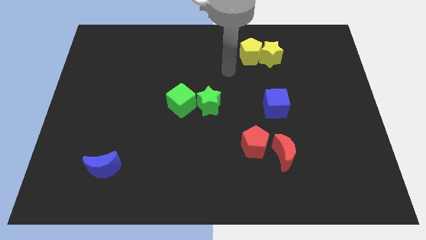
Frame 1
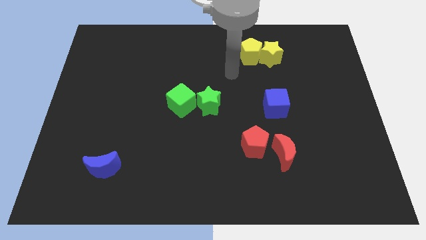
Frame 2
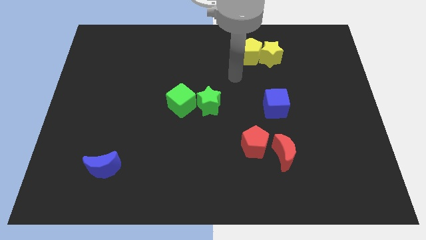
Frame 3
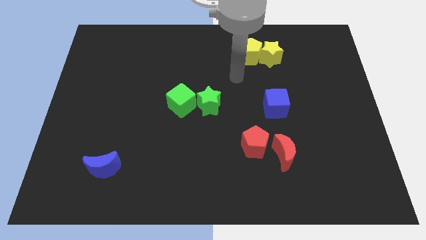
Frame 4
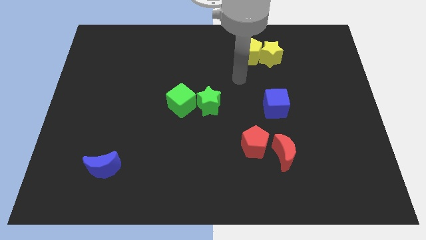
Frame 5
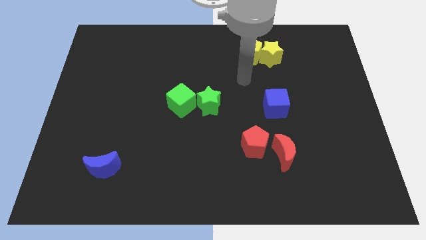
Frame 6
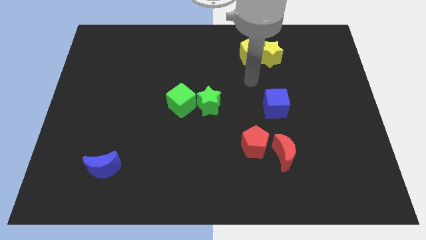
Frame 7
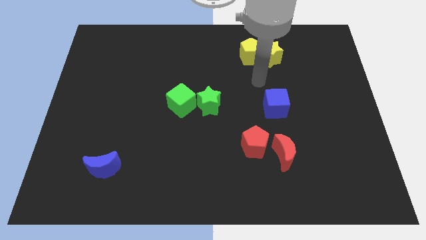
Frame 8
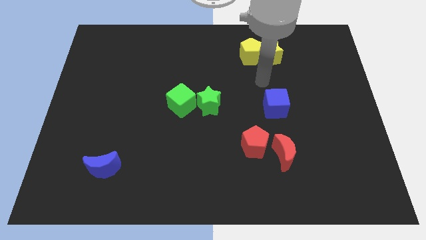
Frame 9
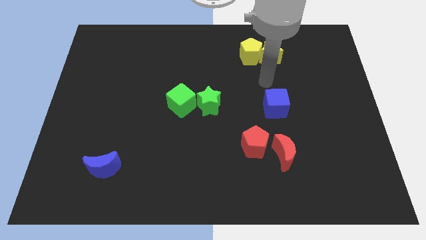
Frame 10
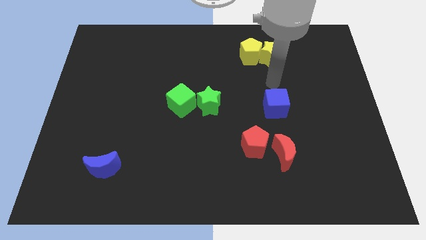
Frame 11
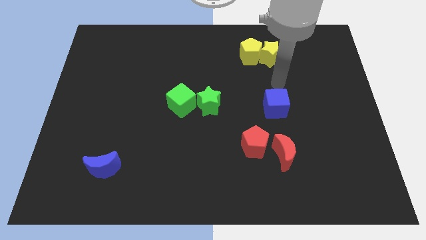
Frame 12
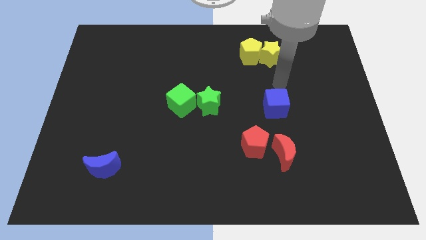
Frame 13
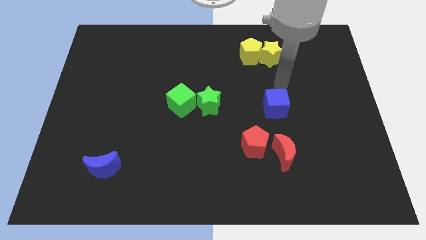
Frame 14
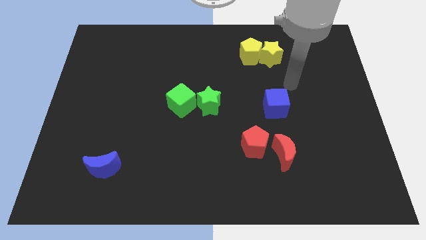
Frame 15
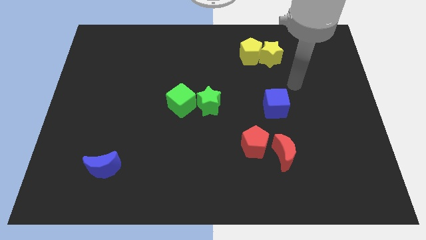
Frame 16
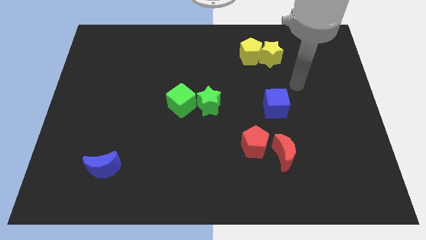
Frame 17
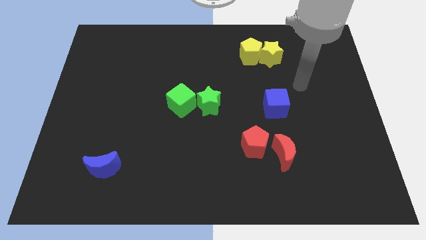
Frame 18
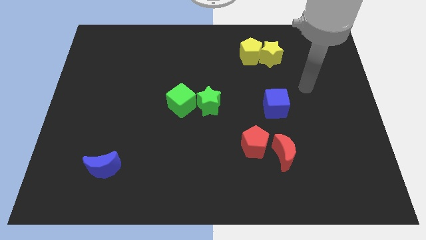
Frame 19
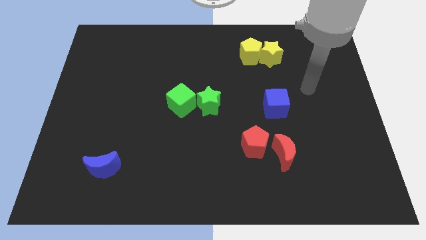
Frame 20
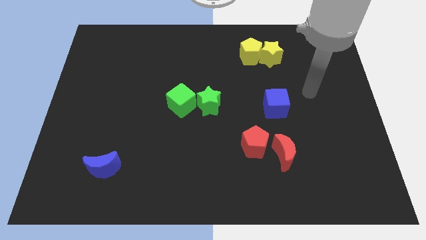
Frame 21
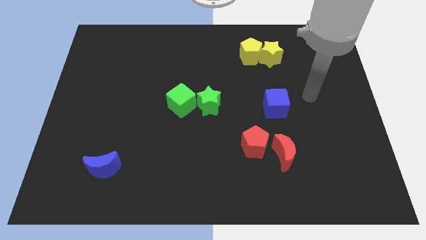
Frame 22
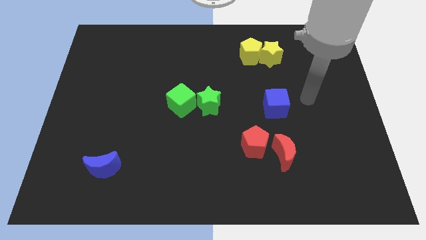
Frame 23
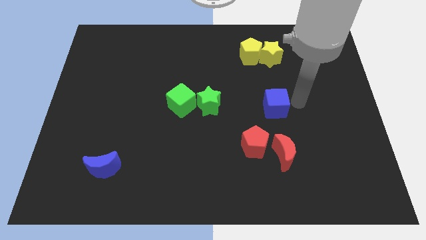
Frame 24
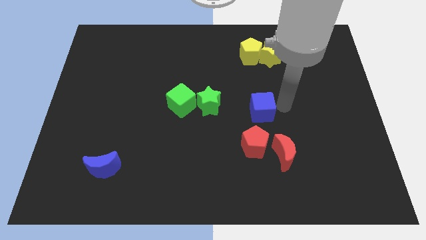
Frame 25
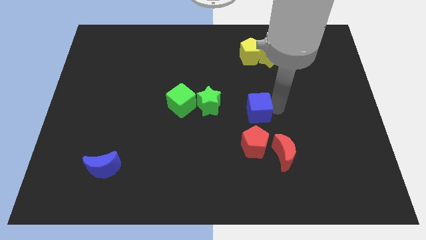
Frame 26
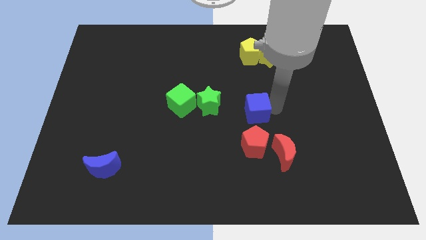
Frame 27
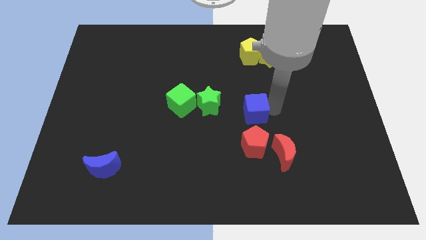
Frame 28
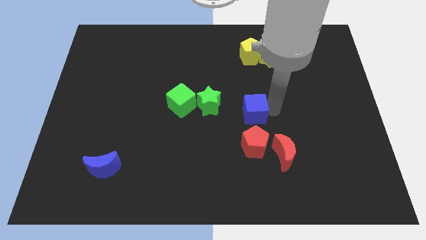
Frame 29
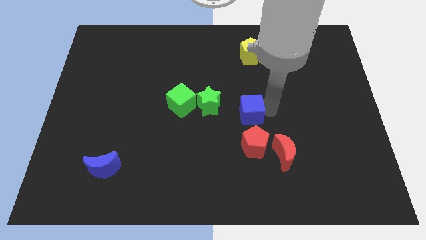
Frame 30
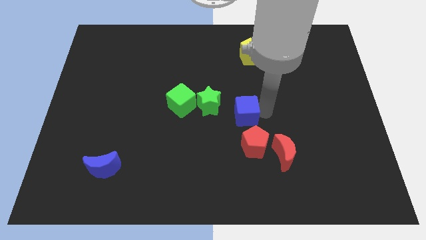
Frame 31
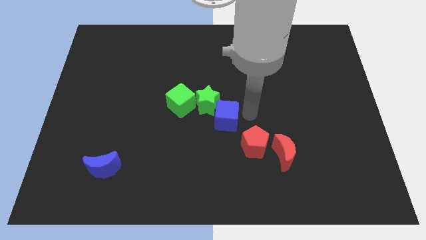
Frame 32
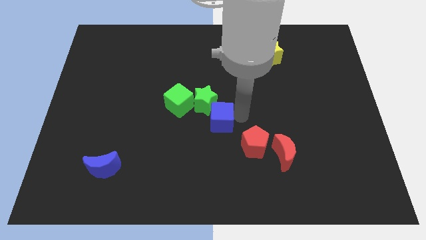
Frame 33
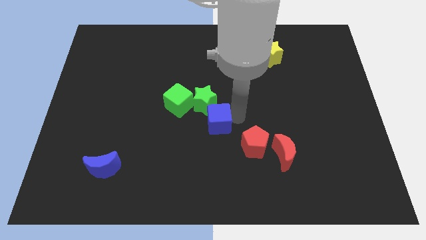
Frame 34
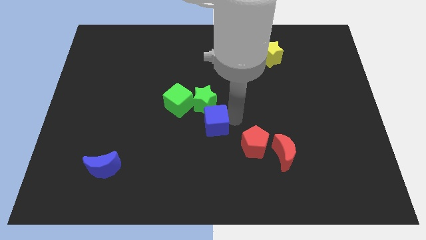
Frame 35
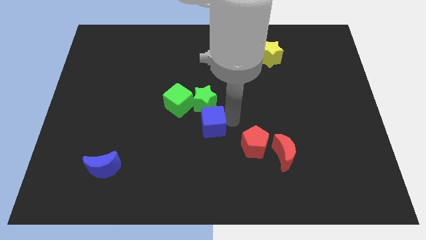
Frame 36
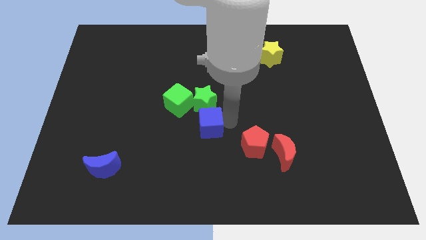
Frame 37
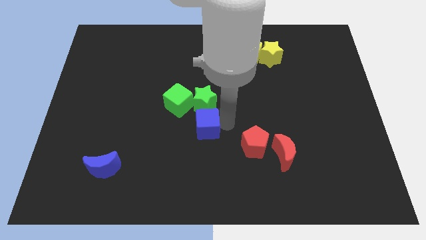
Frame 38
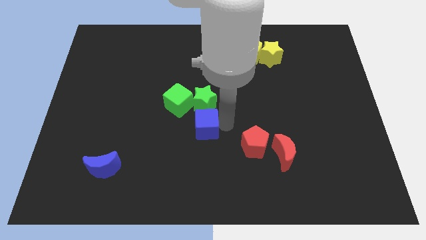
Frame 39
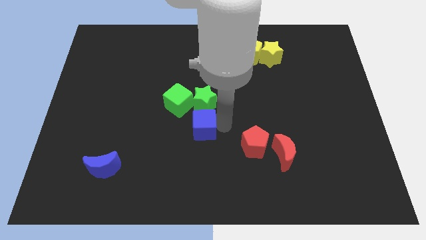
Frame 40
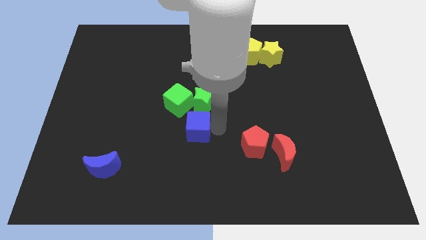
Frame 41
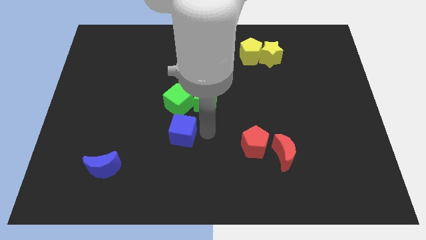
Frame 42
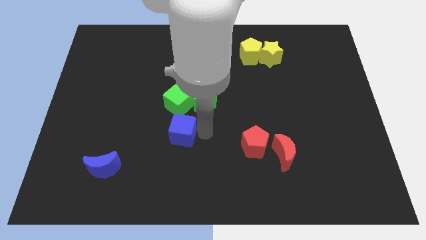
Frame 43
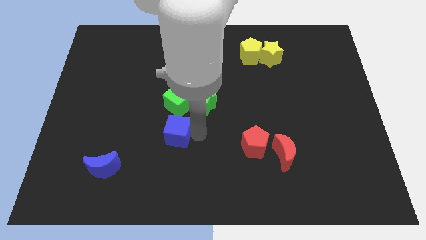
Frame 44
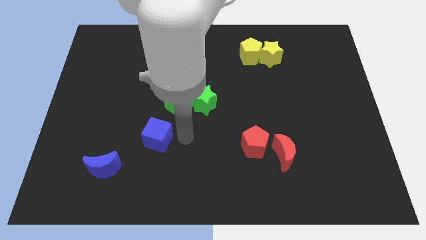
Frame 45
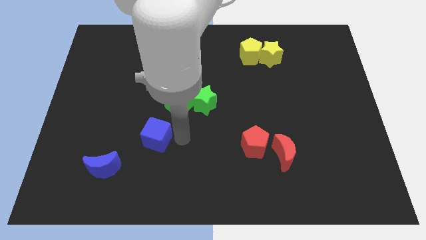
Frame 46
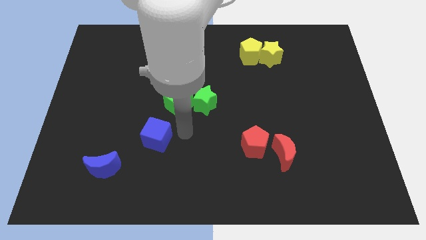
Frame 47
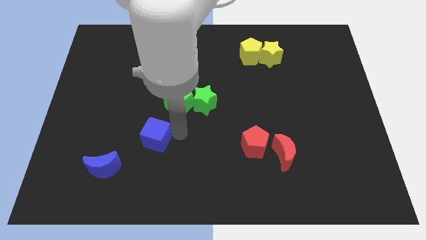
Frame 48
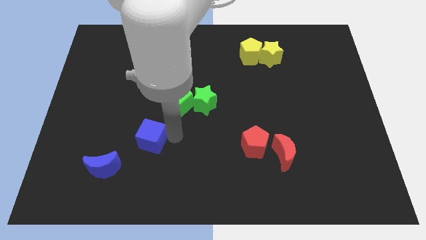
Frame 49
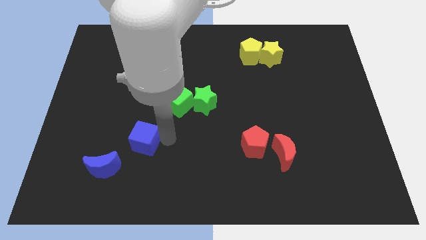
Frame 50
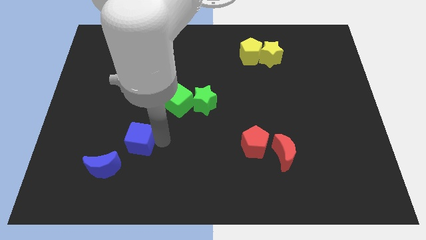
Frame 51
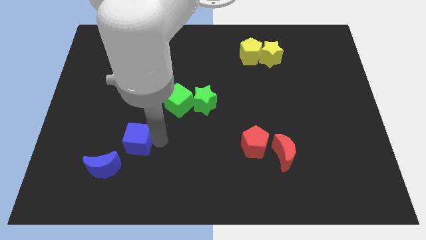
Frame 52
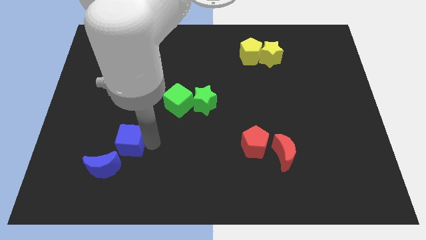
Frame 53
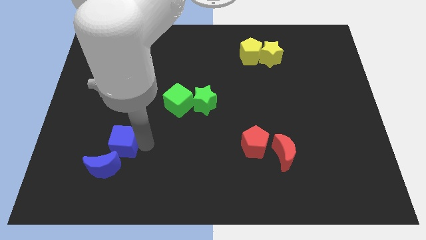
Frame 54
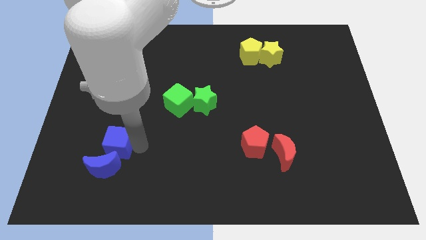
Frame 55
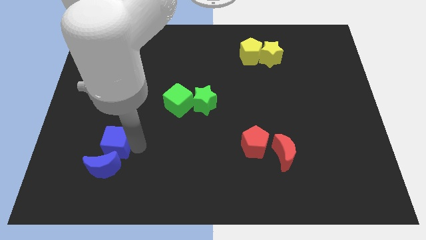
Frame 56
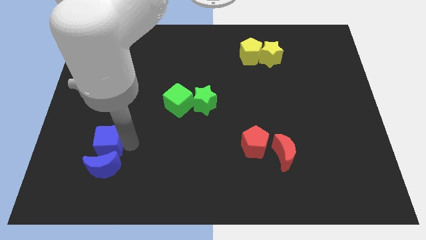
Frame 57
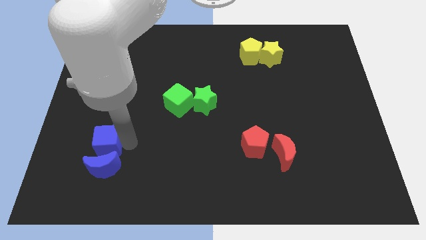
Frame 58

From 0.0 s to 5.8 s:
push the blue cube to the top of the blue crescent

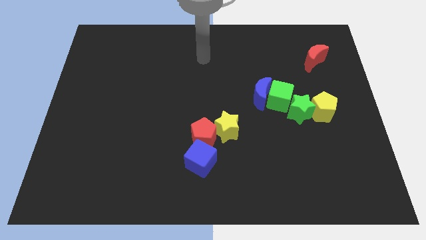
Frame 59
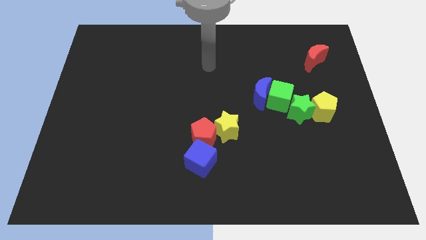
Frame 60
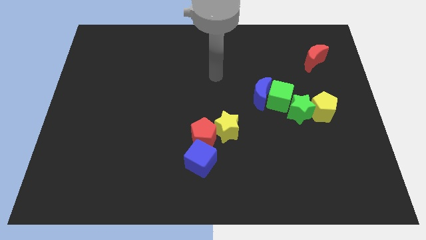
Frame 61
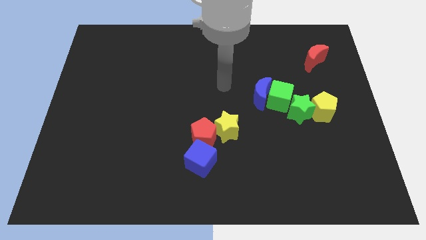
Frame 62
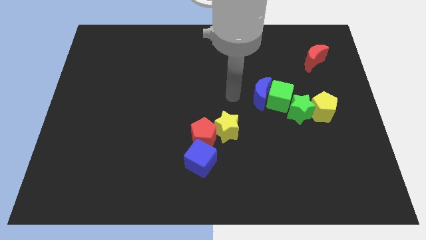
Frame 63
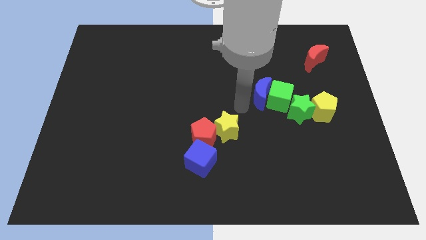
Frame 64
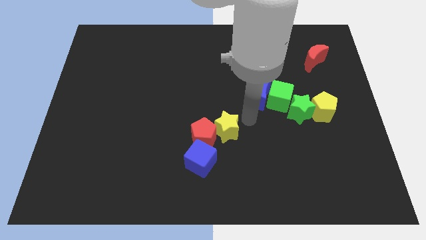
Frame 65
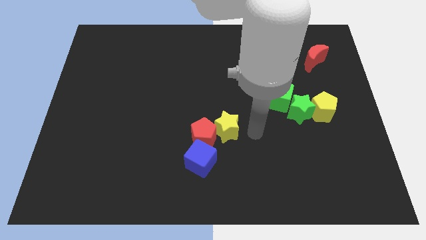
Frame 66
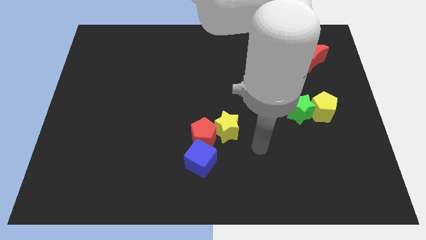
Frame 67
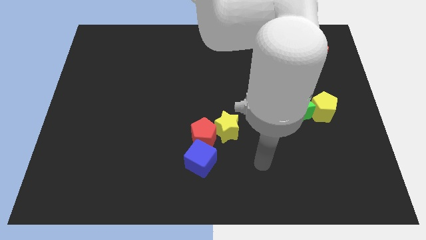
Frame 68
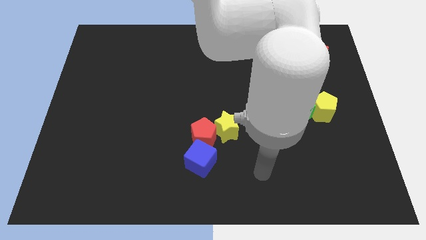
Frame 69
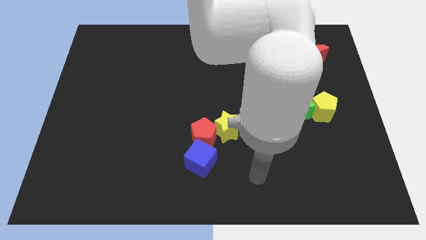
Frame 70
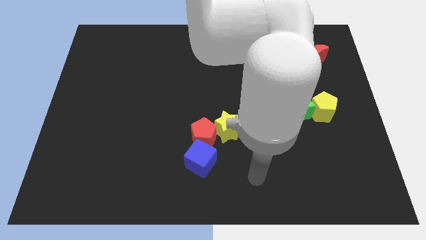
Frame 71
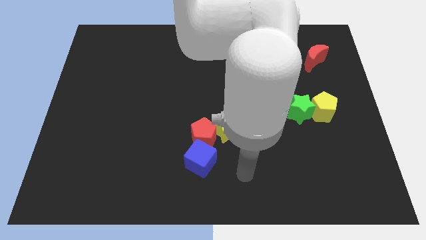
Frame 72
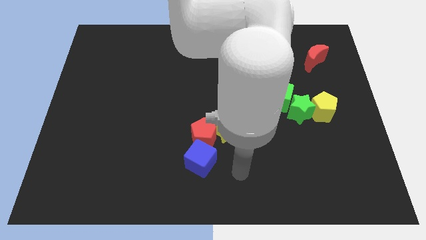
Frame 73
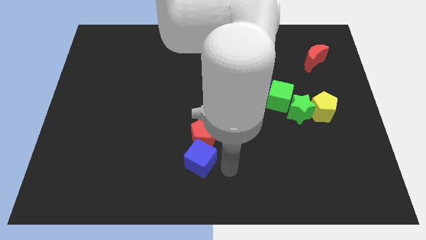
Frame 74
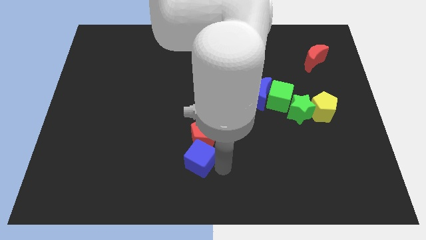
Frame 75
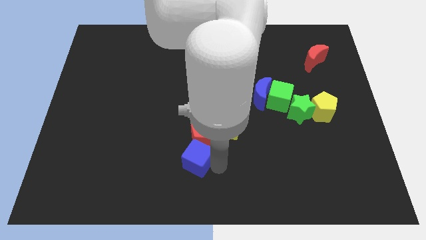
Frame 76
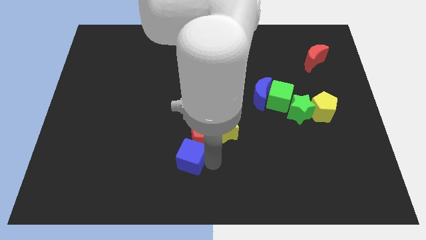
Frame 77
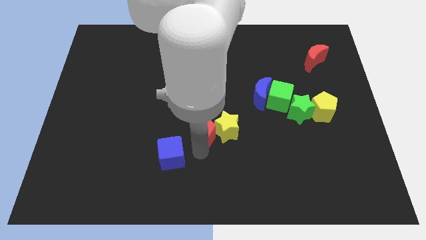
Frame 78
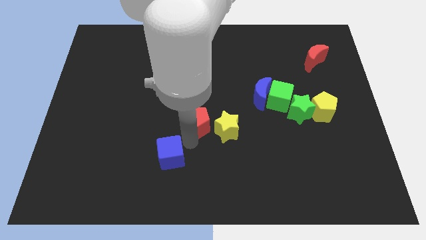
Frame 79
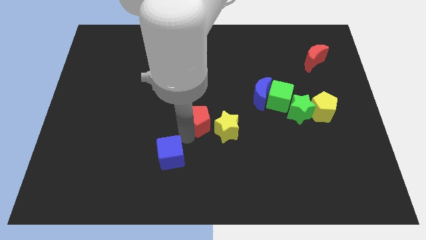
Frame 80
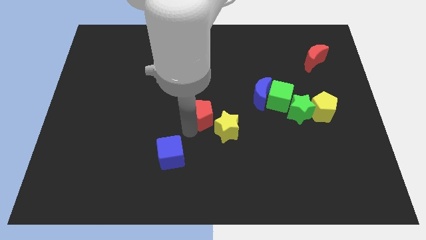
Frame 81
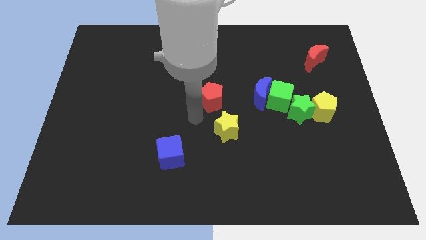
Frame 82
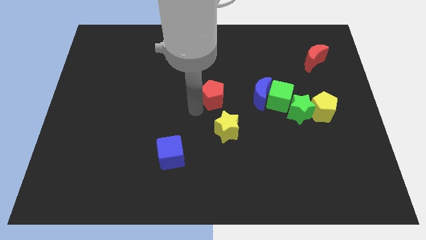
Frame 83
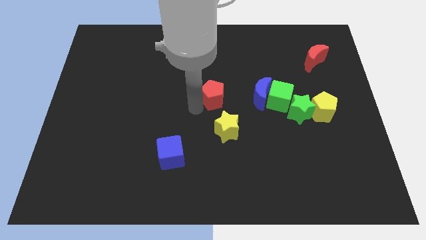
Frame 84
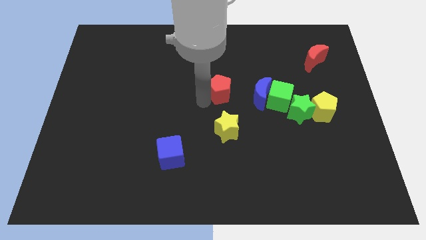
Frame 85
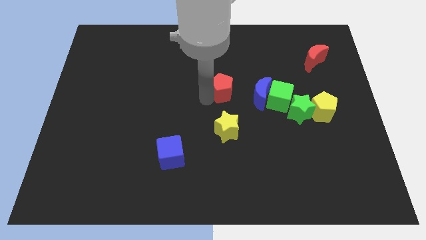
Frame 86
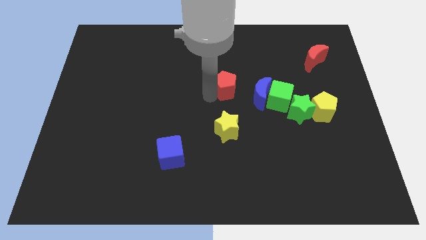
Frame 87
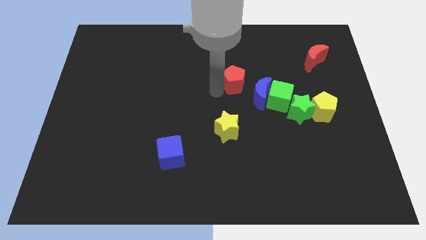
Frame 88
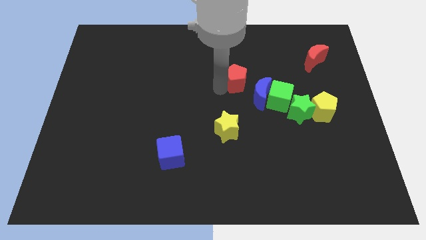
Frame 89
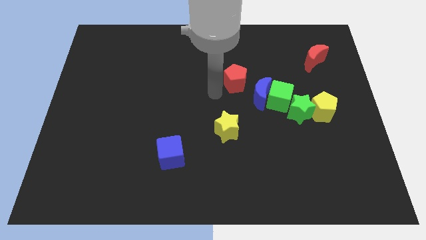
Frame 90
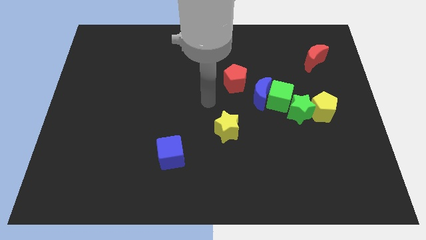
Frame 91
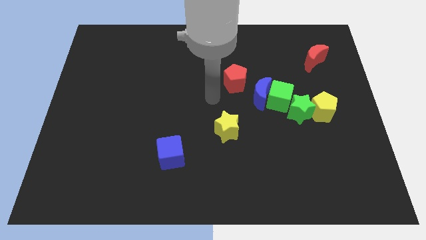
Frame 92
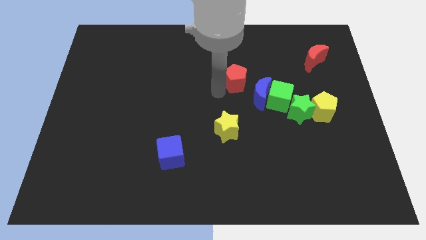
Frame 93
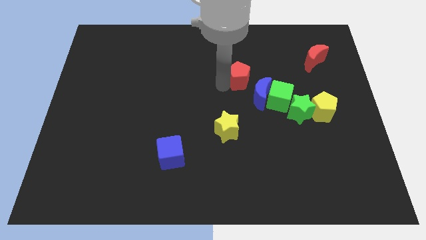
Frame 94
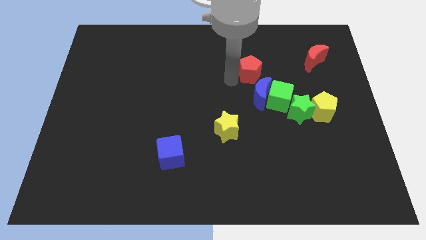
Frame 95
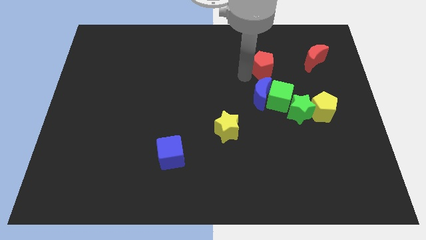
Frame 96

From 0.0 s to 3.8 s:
place the red pentagon above the blue crescent
